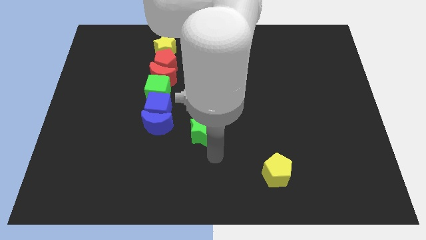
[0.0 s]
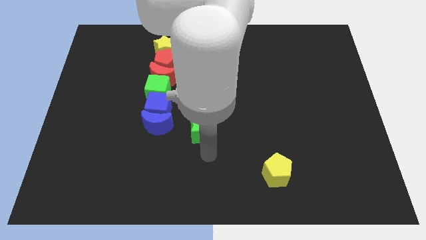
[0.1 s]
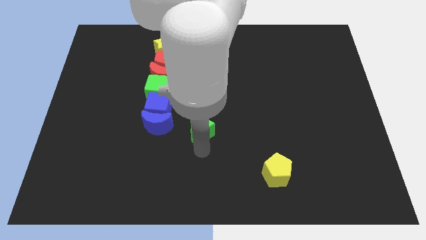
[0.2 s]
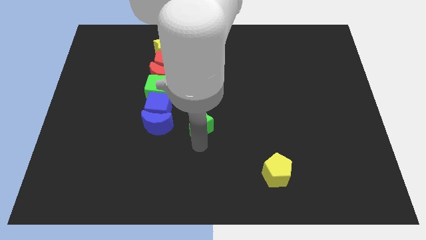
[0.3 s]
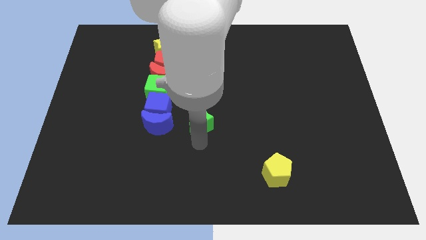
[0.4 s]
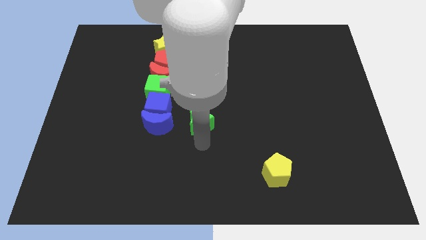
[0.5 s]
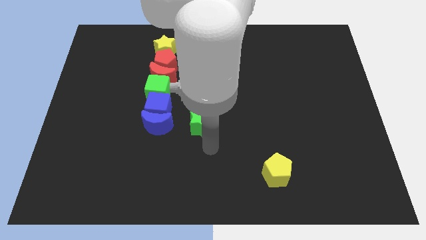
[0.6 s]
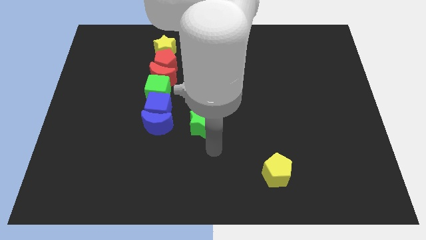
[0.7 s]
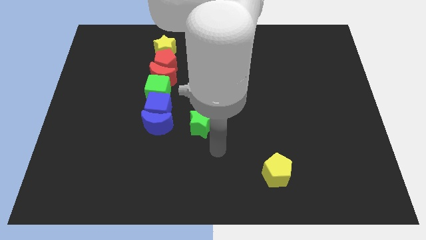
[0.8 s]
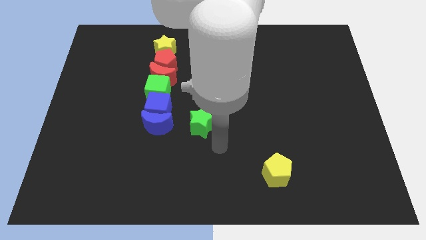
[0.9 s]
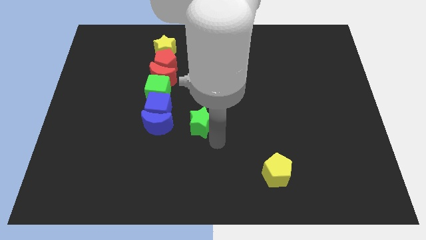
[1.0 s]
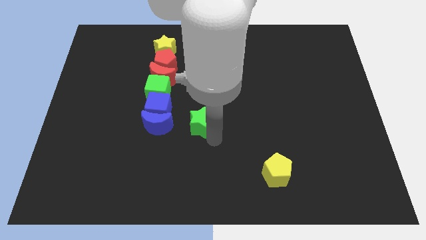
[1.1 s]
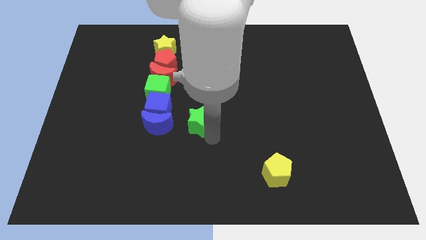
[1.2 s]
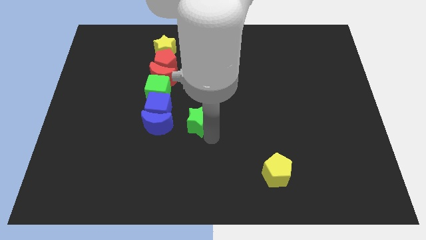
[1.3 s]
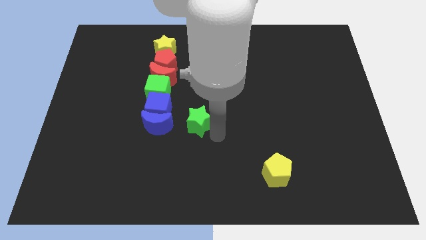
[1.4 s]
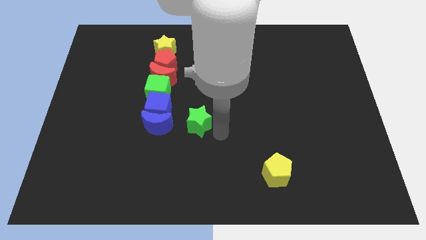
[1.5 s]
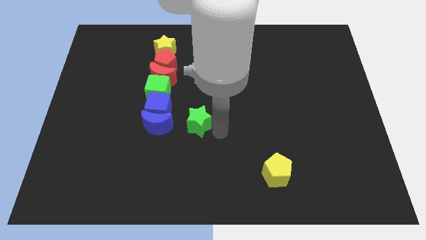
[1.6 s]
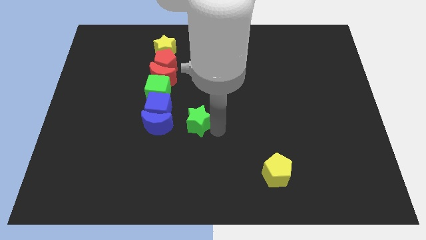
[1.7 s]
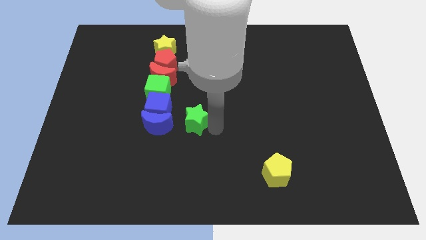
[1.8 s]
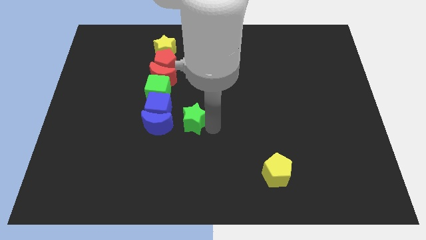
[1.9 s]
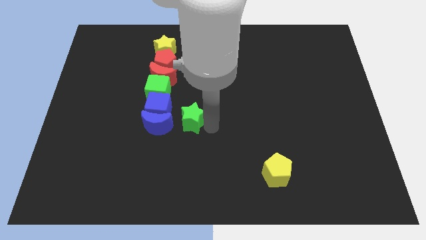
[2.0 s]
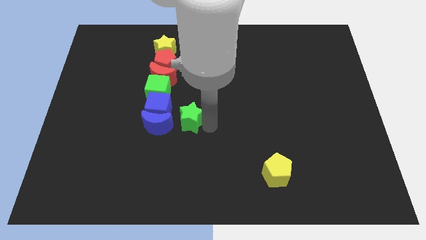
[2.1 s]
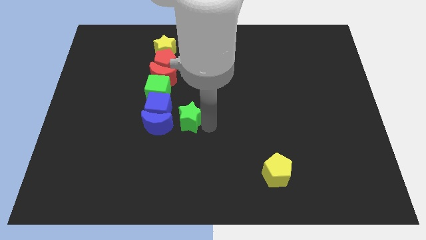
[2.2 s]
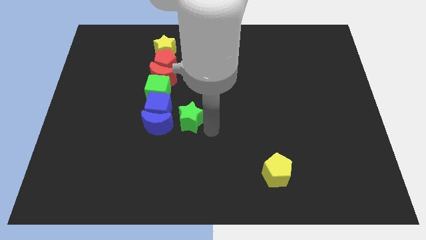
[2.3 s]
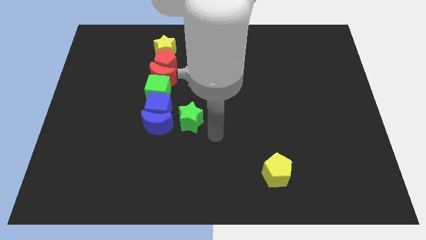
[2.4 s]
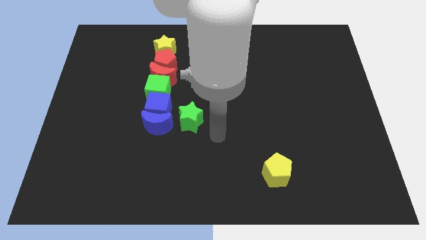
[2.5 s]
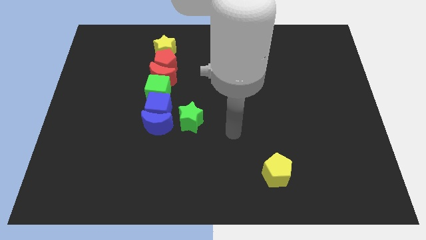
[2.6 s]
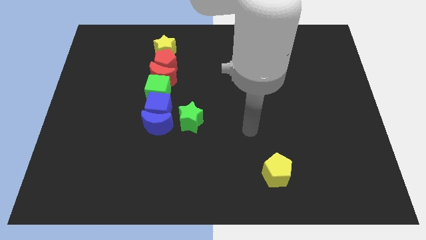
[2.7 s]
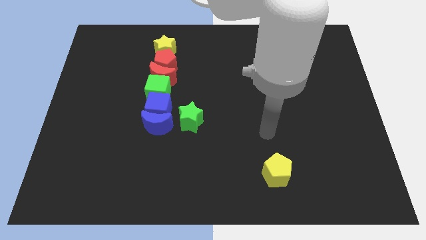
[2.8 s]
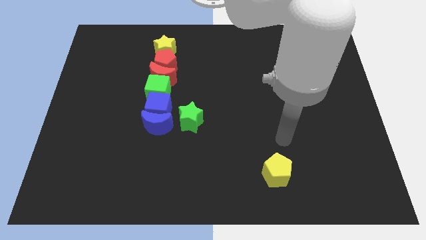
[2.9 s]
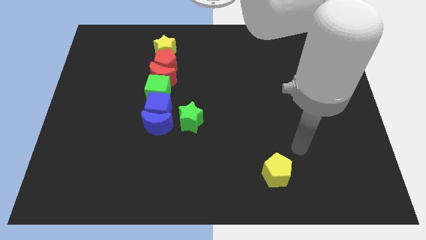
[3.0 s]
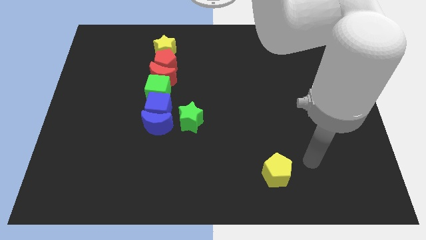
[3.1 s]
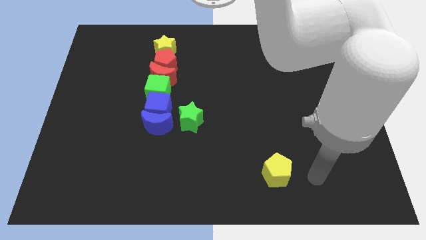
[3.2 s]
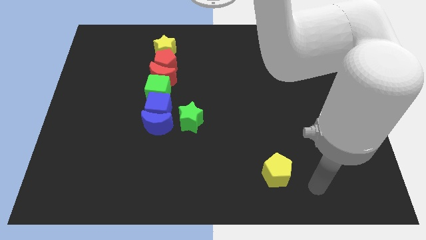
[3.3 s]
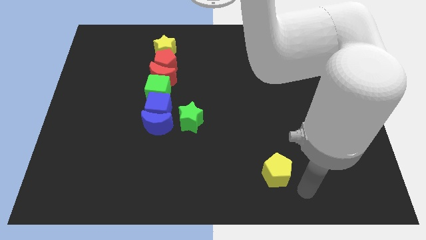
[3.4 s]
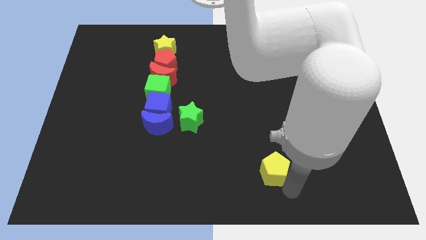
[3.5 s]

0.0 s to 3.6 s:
slightly push the green star close to the blue moon

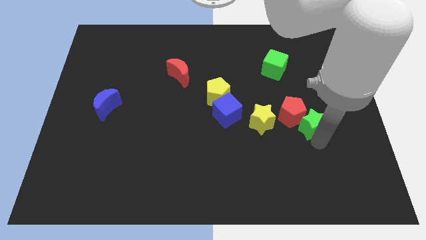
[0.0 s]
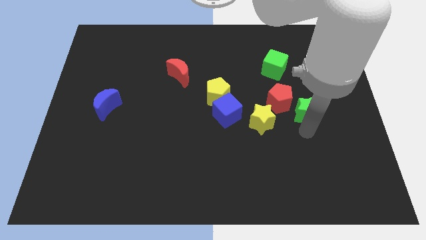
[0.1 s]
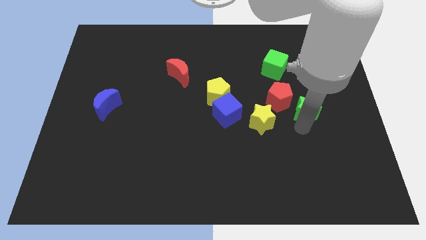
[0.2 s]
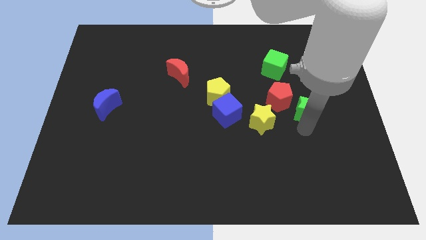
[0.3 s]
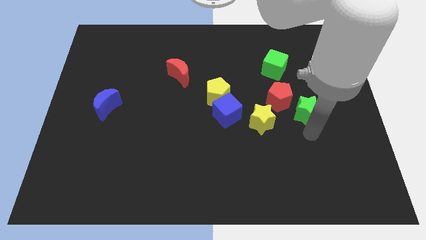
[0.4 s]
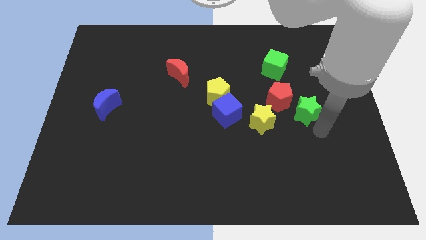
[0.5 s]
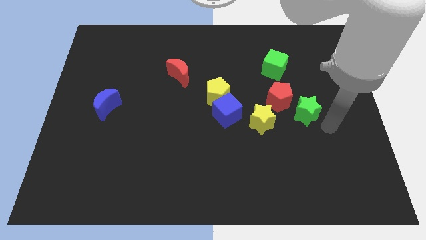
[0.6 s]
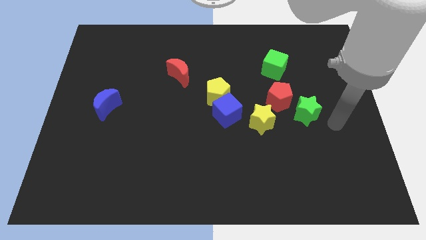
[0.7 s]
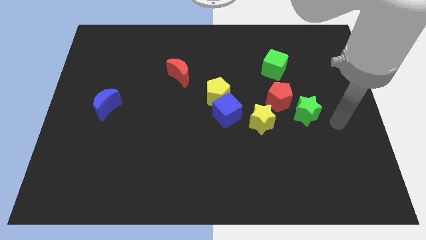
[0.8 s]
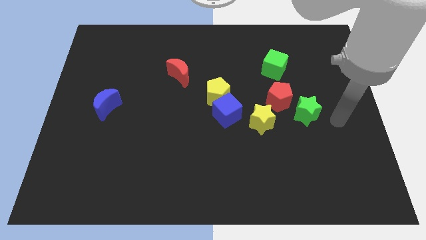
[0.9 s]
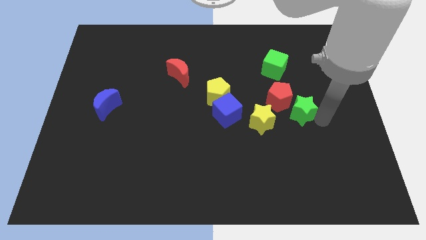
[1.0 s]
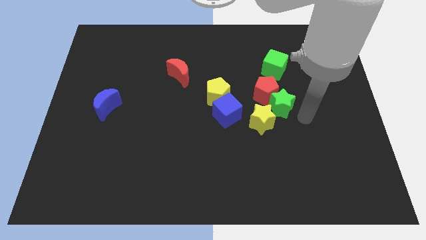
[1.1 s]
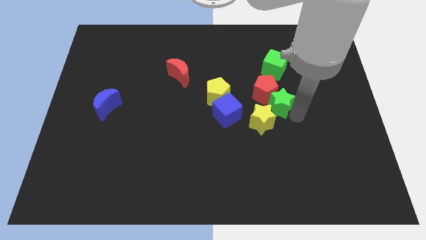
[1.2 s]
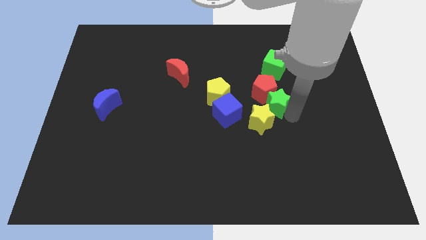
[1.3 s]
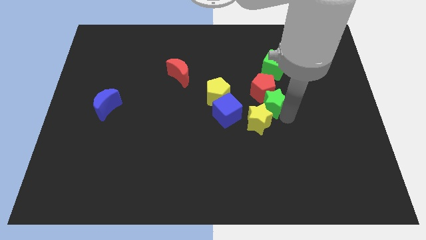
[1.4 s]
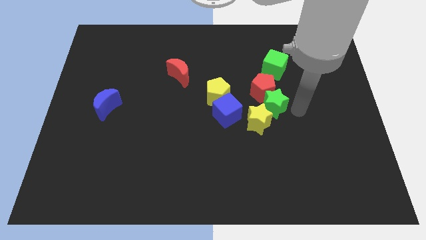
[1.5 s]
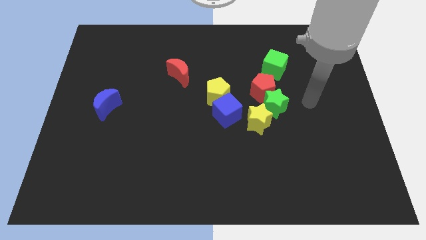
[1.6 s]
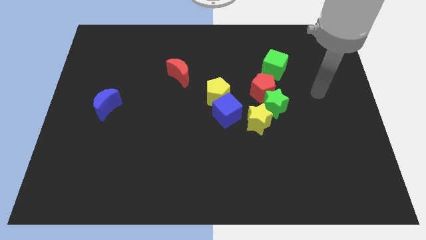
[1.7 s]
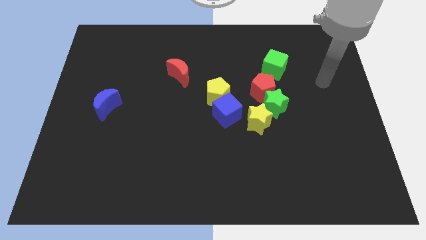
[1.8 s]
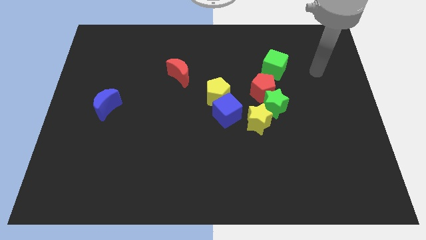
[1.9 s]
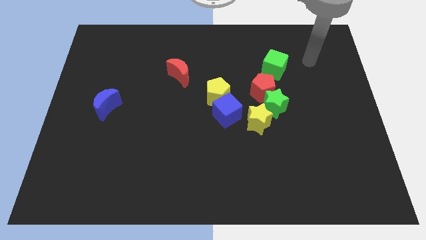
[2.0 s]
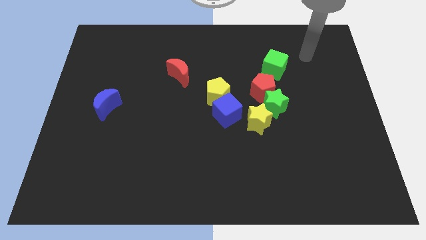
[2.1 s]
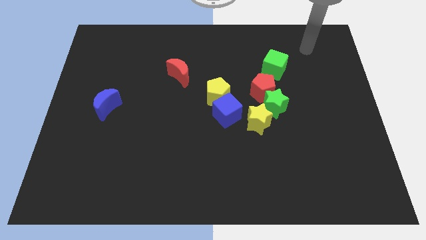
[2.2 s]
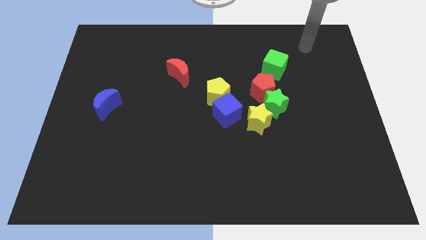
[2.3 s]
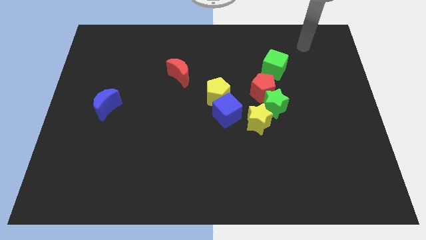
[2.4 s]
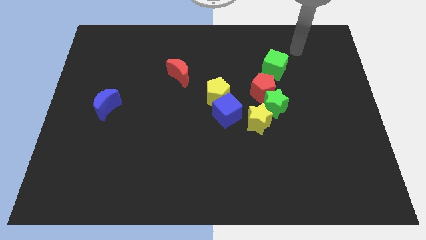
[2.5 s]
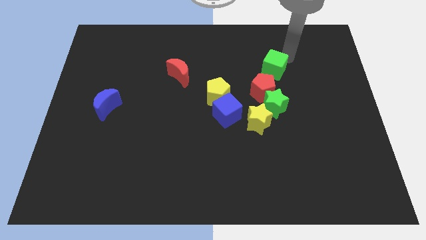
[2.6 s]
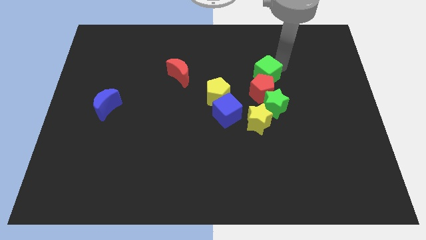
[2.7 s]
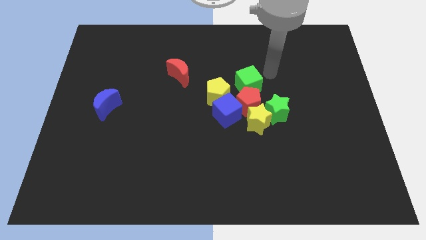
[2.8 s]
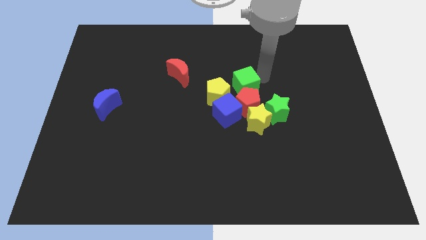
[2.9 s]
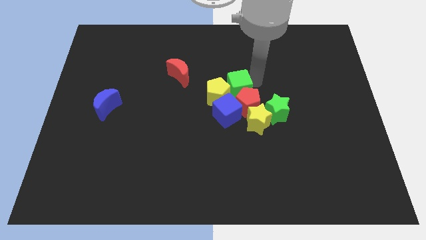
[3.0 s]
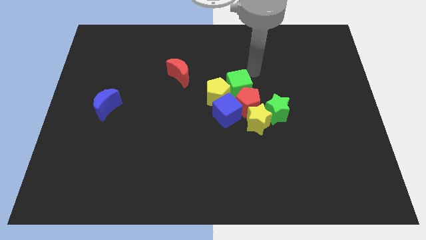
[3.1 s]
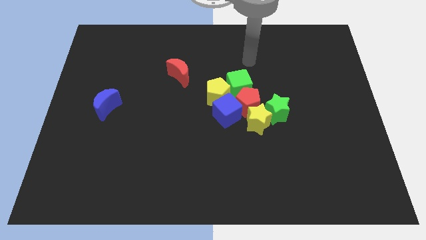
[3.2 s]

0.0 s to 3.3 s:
group up the green star yellow star red pentagon green cube blue cube and yellow pentagon at the center of the table

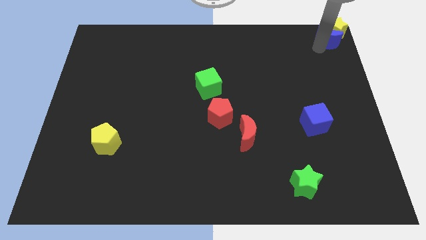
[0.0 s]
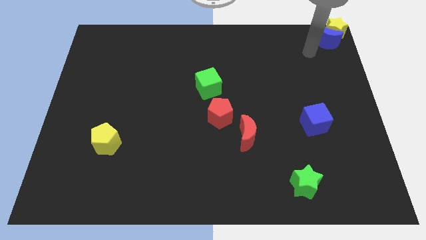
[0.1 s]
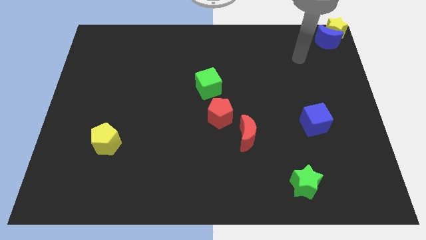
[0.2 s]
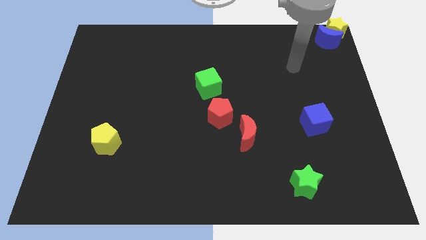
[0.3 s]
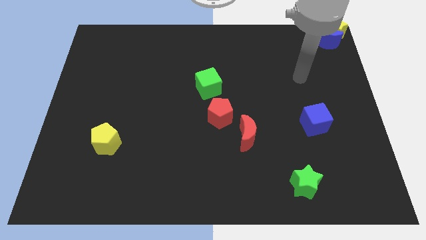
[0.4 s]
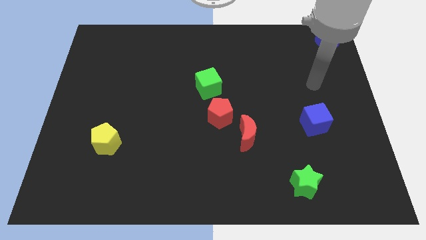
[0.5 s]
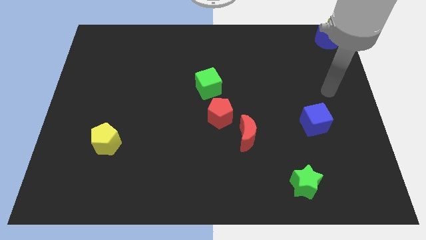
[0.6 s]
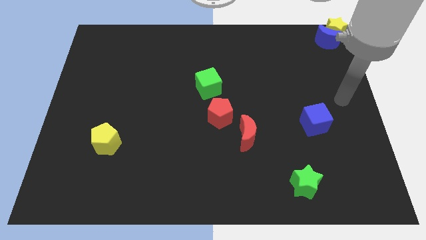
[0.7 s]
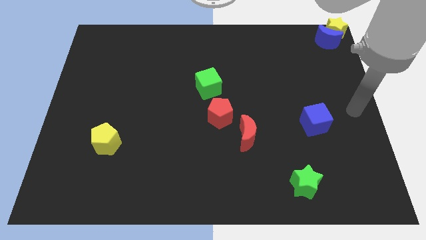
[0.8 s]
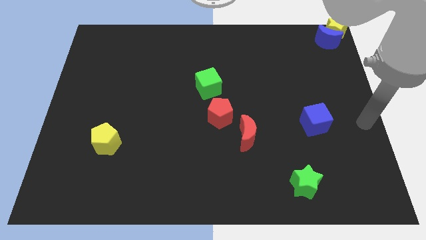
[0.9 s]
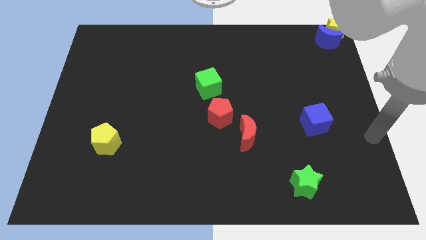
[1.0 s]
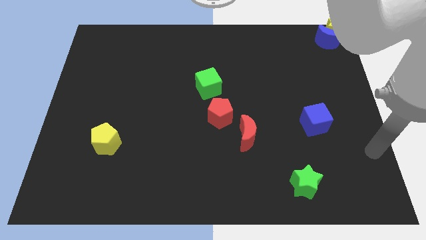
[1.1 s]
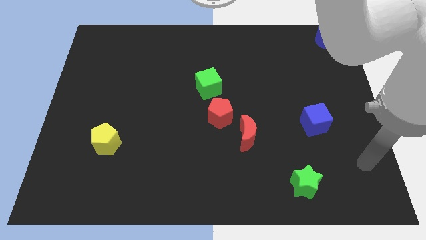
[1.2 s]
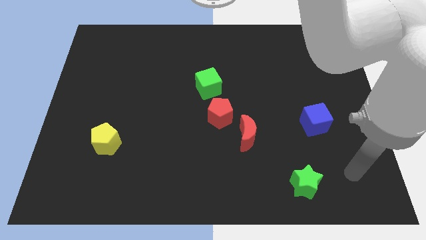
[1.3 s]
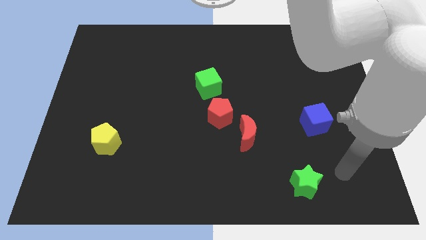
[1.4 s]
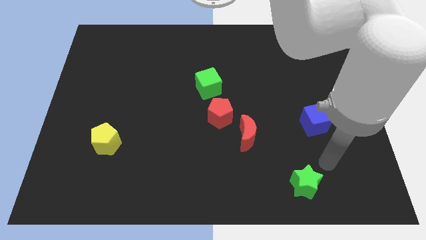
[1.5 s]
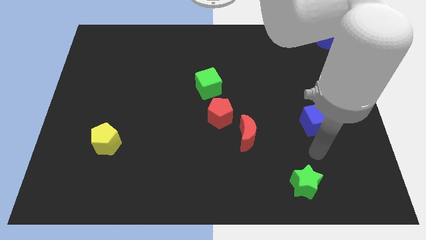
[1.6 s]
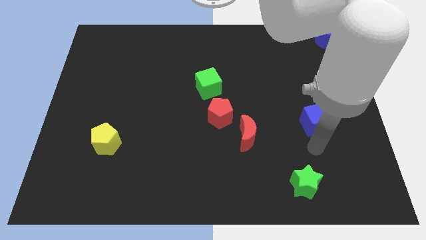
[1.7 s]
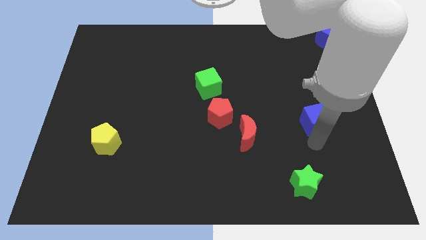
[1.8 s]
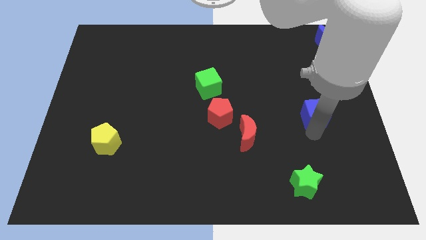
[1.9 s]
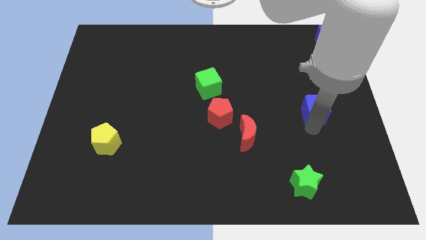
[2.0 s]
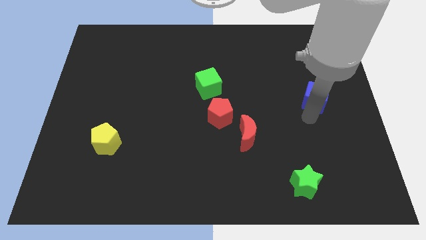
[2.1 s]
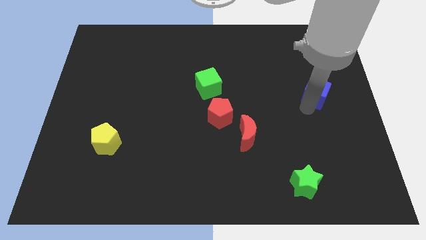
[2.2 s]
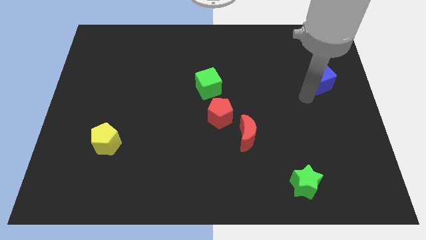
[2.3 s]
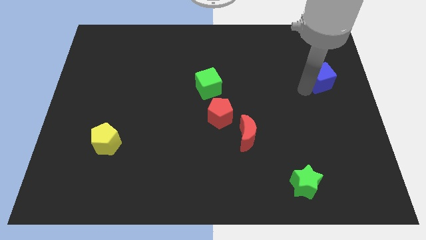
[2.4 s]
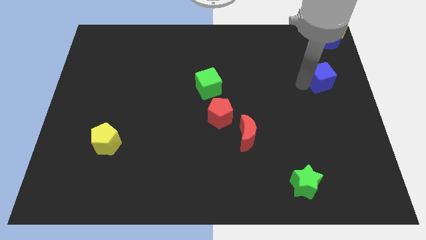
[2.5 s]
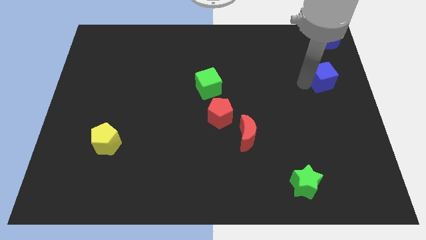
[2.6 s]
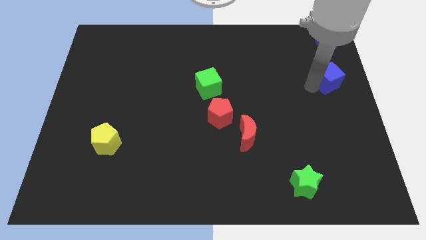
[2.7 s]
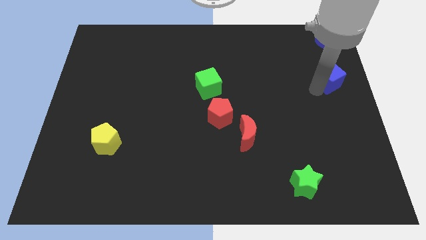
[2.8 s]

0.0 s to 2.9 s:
move the blue cube diagonal to the right of the green cube
